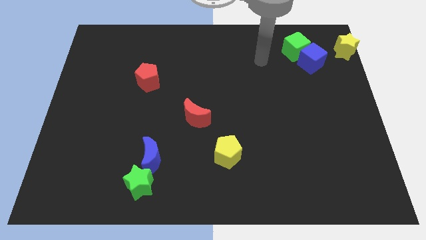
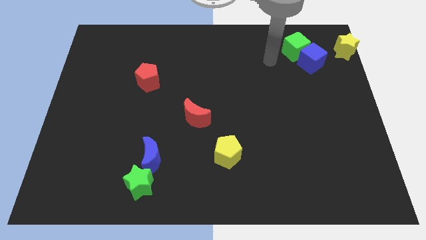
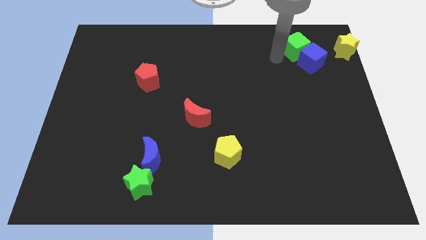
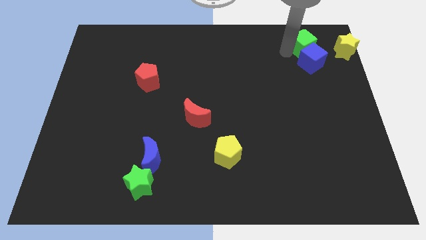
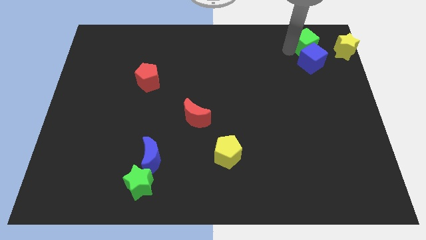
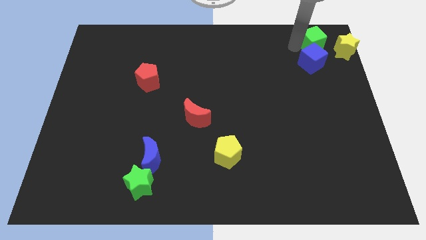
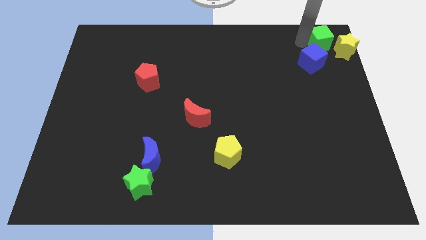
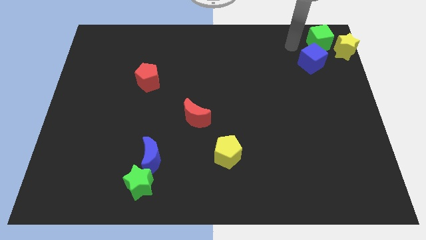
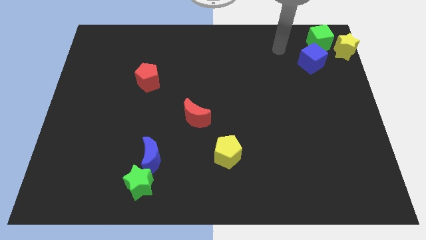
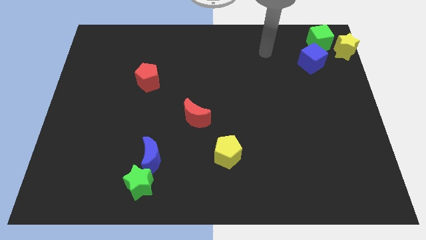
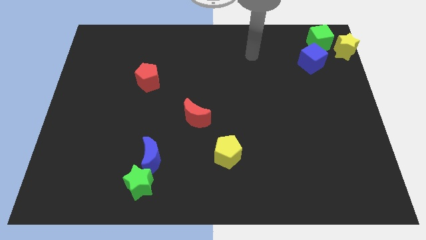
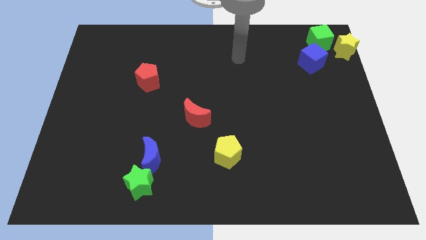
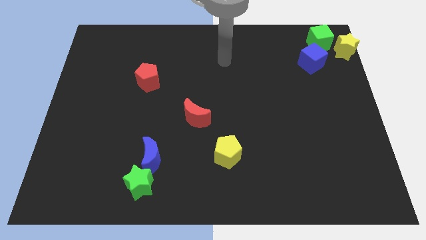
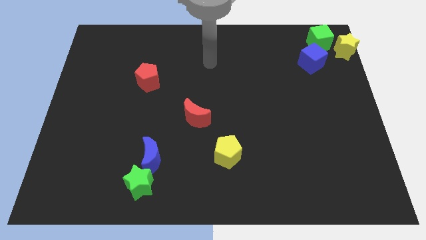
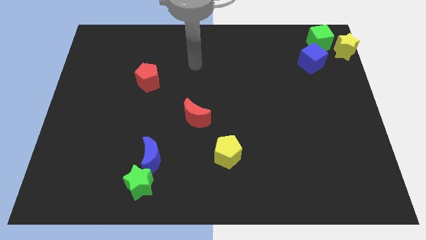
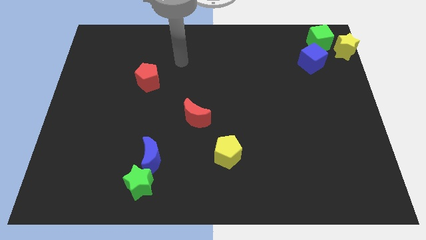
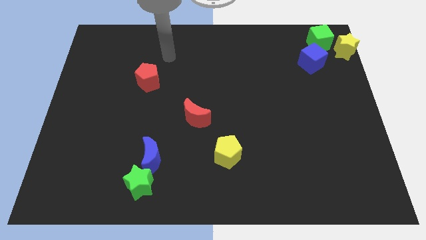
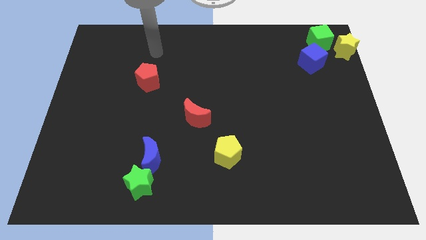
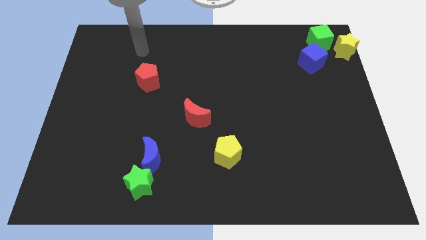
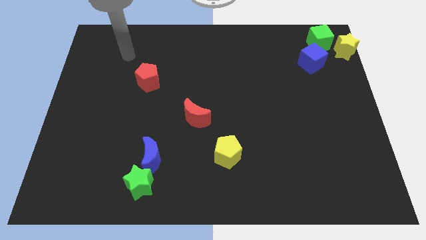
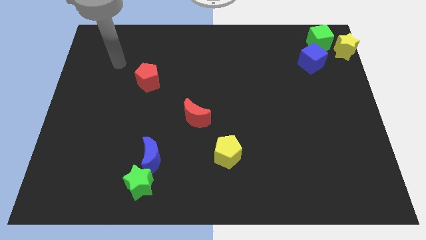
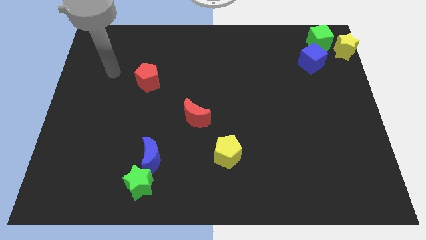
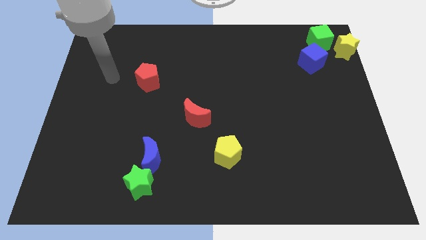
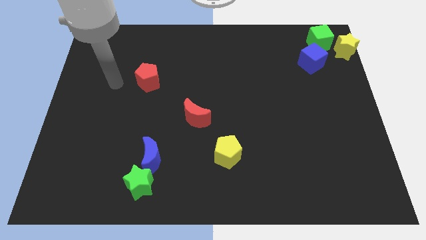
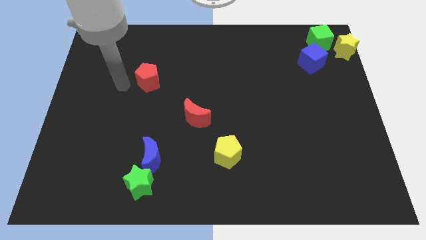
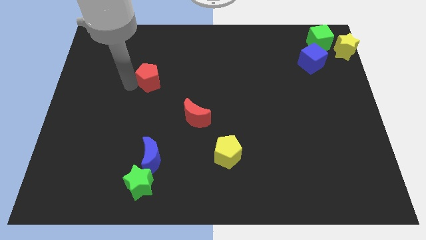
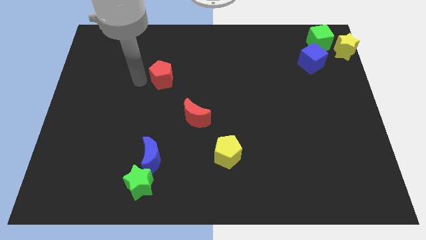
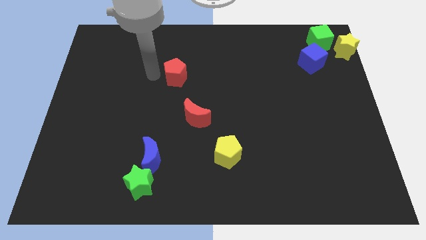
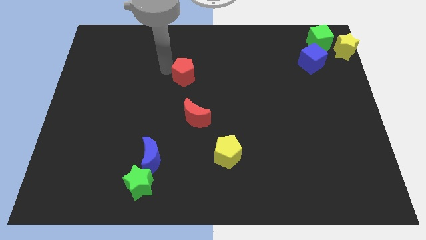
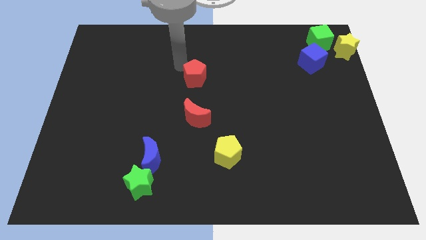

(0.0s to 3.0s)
place the red pentagon above to the red moon

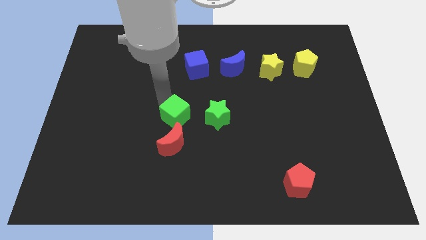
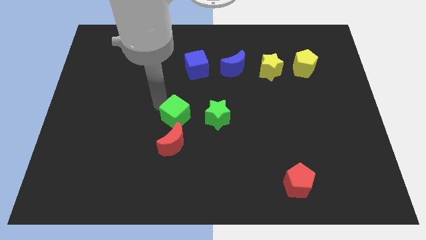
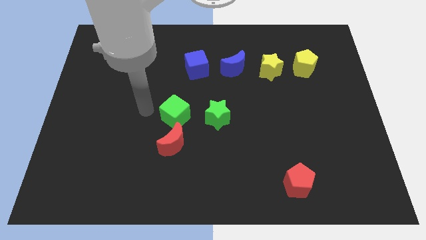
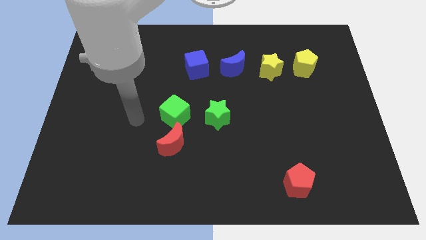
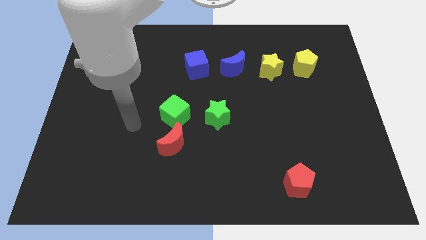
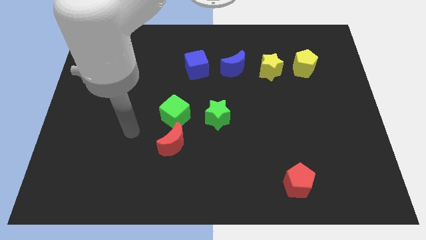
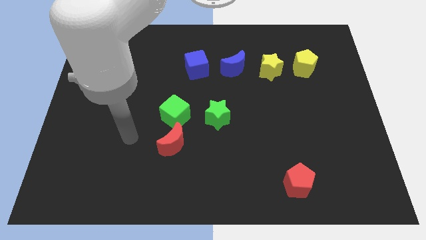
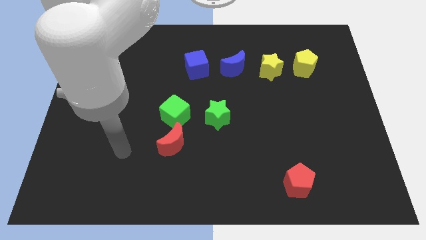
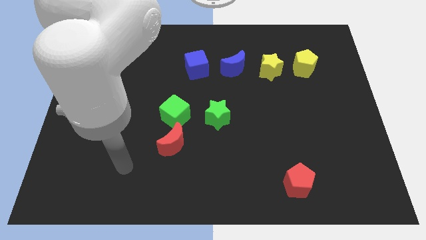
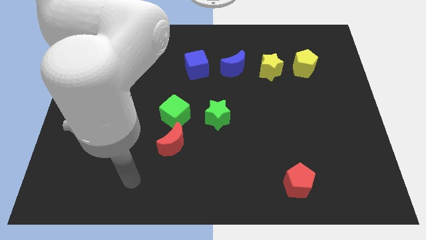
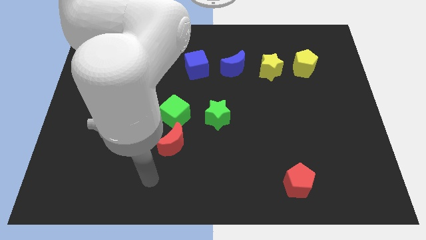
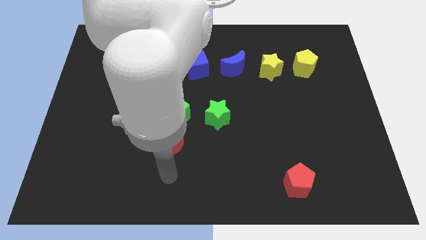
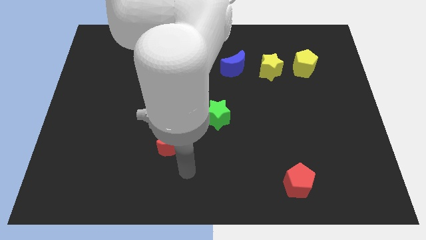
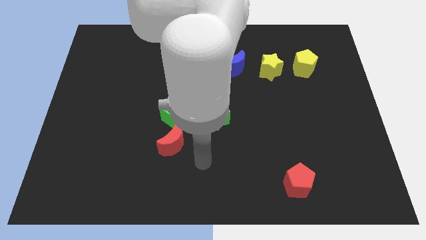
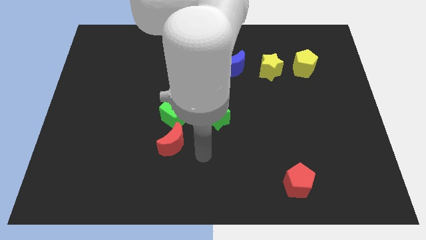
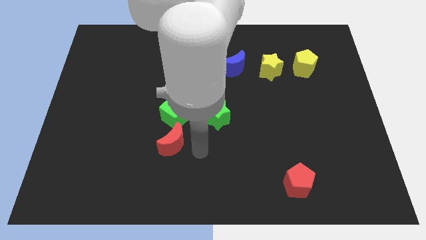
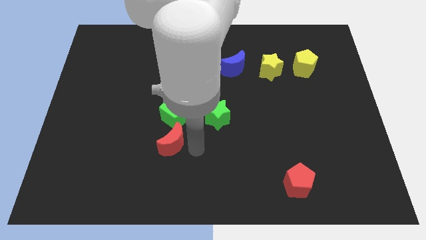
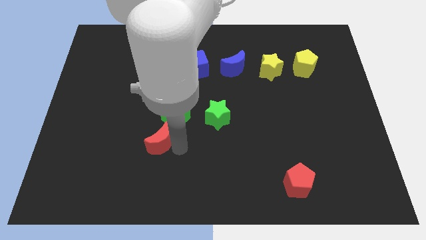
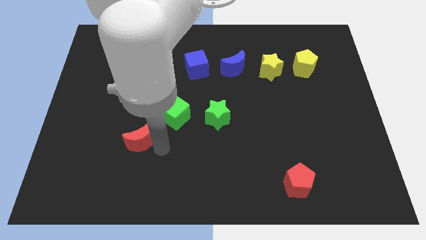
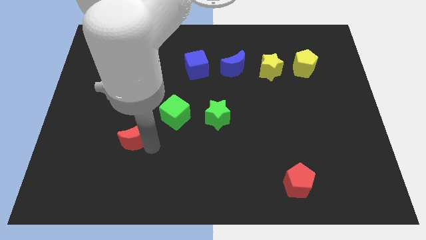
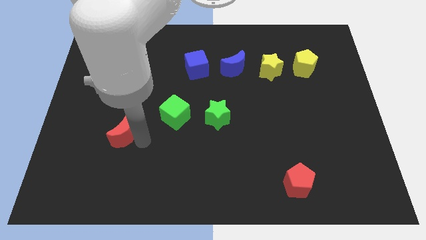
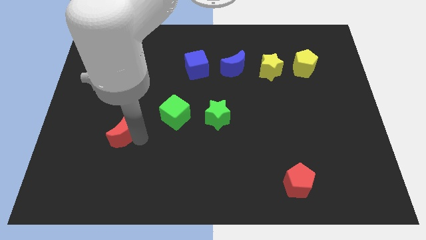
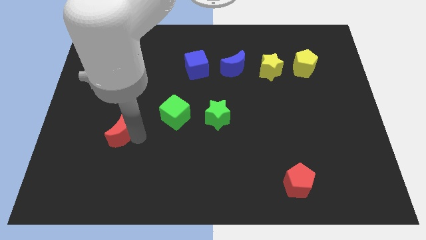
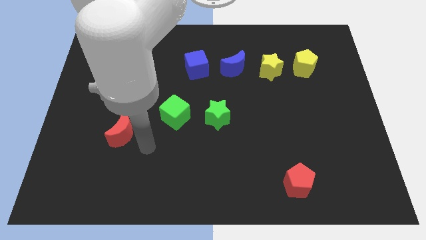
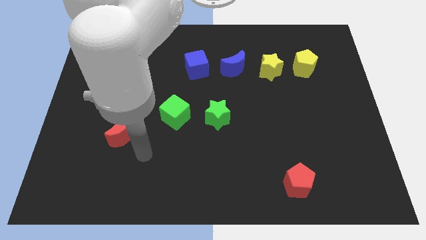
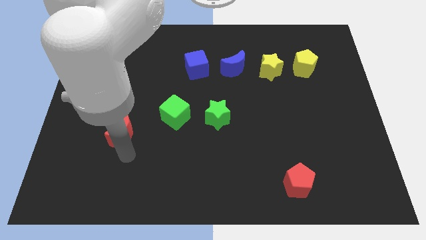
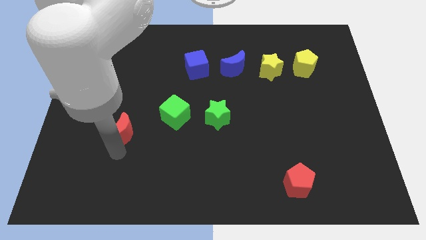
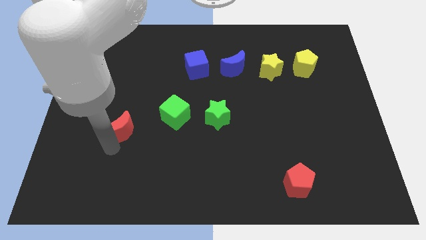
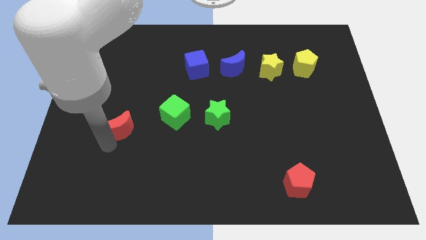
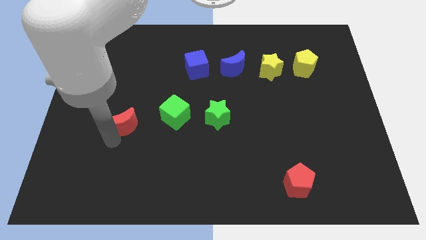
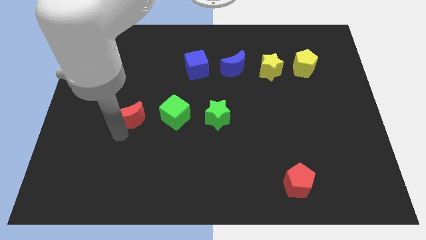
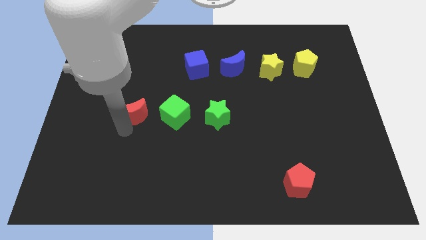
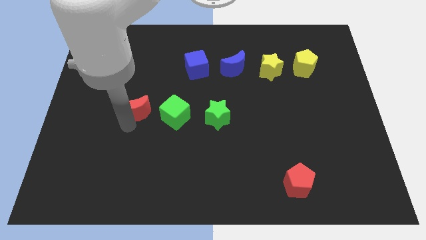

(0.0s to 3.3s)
push red crescent beside green cube

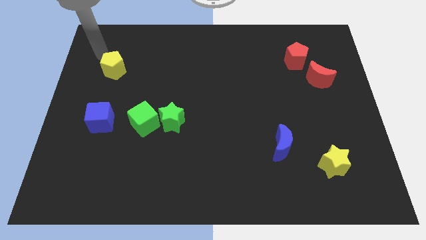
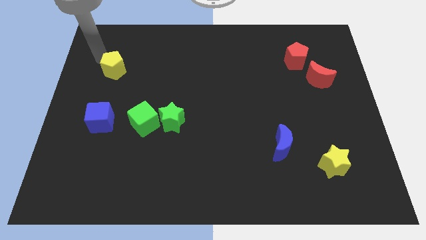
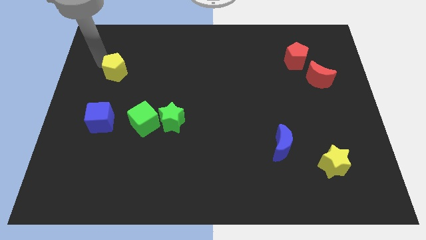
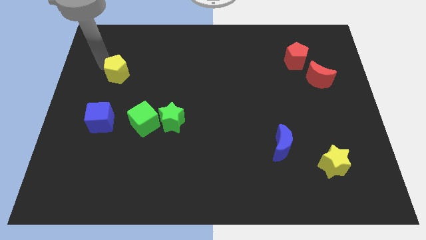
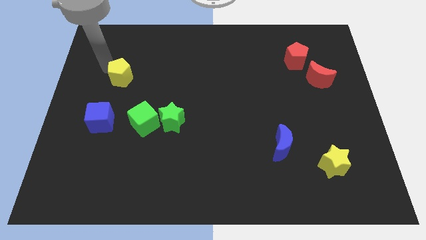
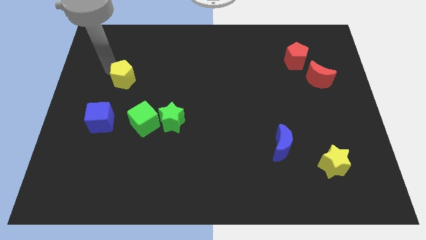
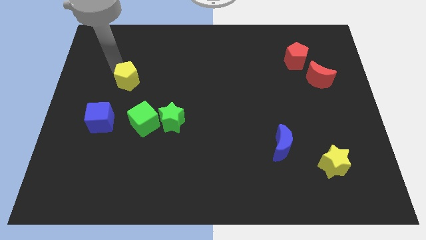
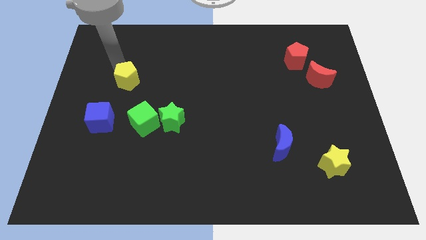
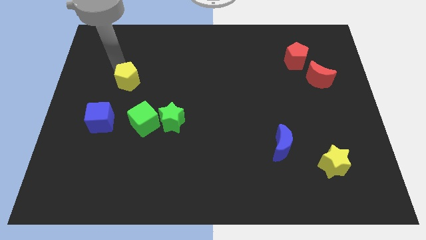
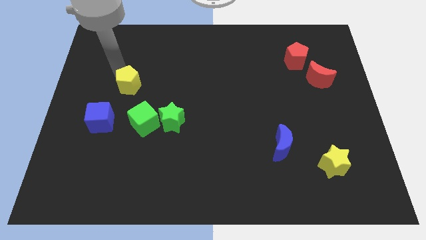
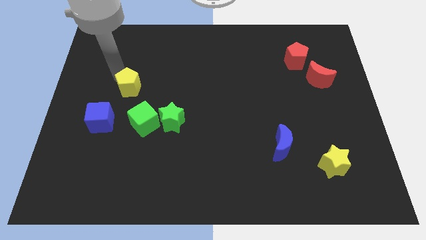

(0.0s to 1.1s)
push the yellow pentagon towards the green cube

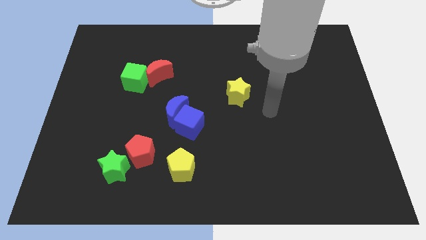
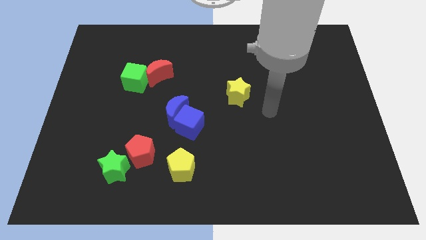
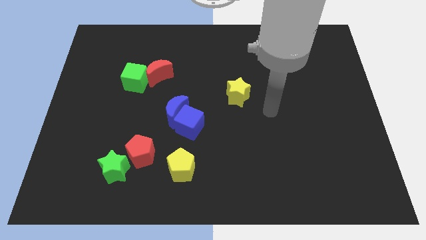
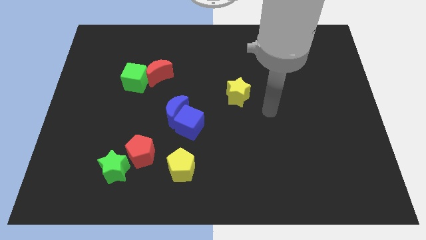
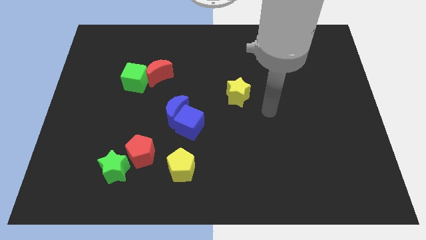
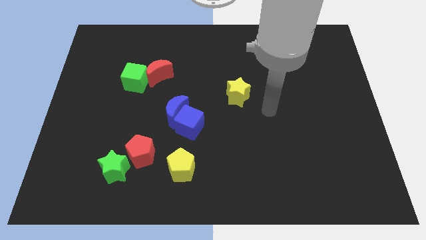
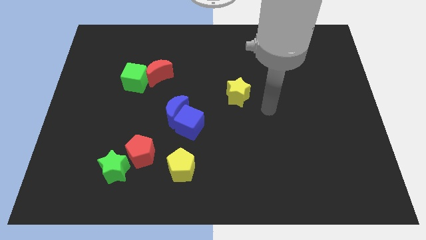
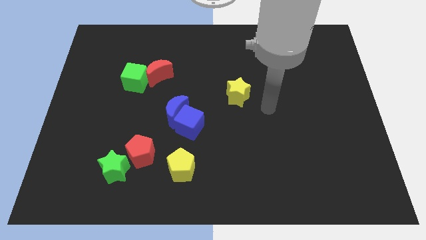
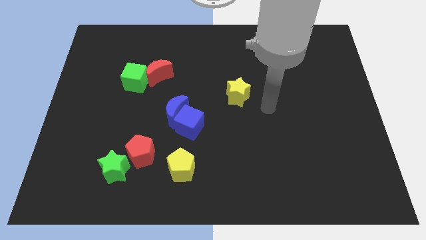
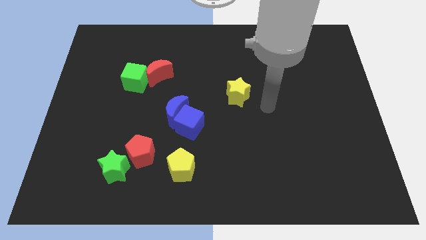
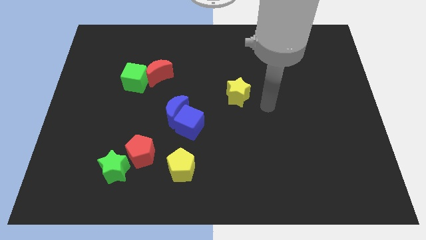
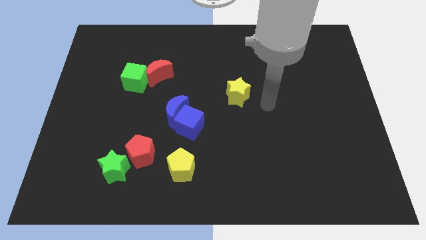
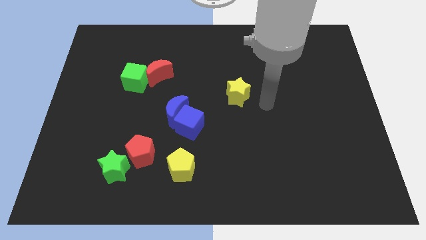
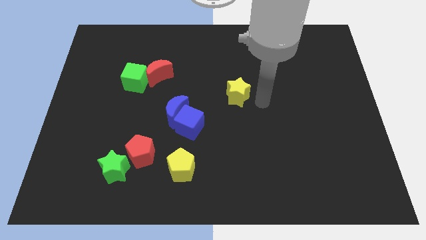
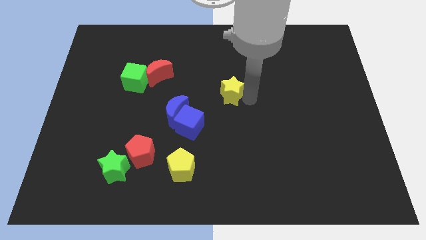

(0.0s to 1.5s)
place your arm to the right of the yellow star

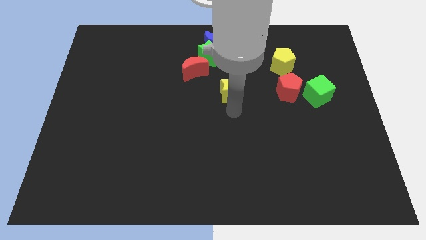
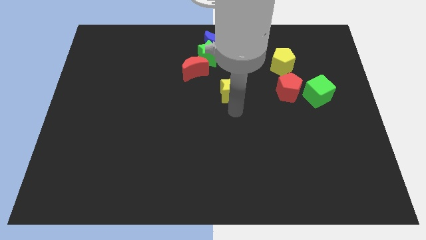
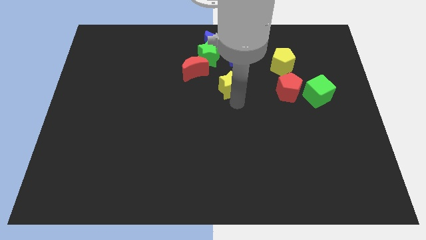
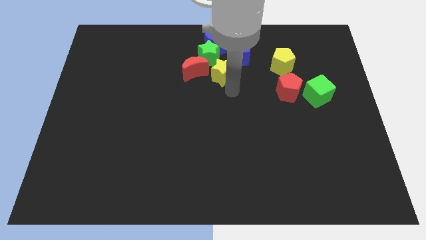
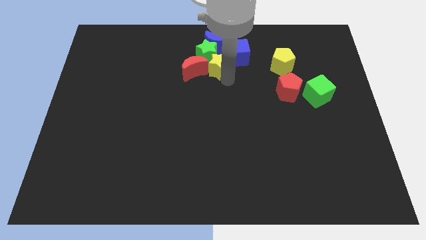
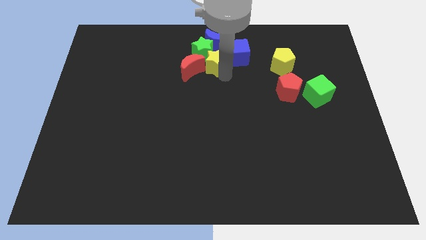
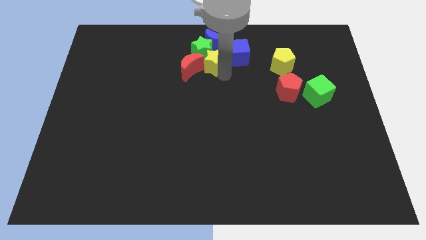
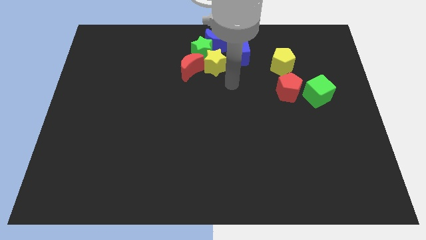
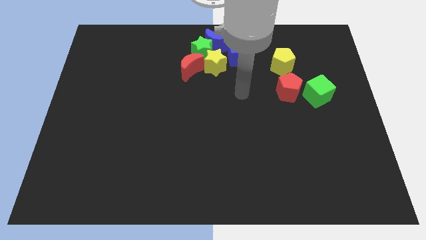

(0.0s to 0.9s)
push the yellow star to the right of the green star
